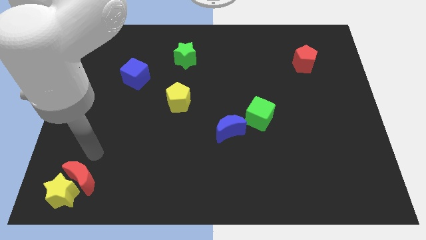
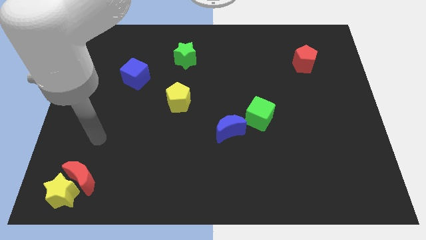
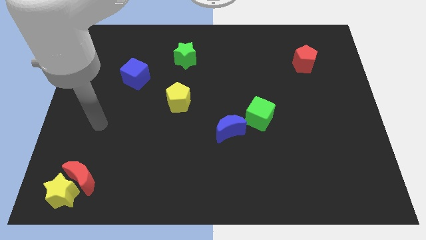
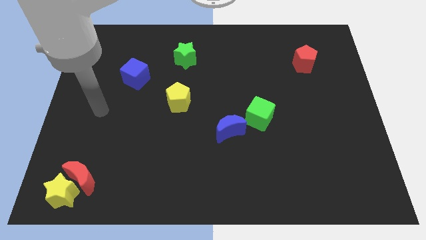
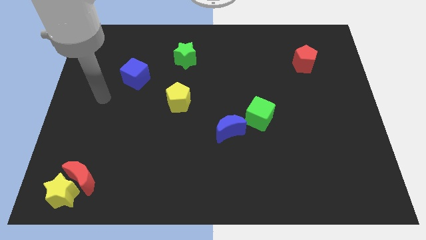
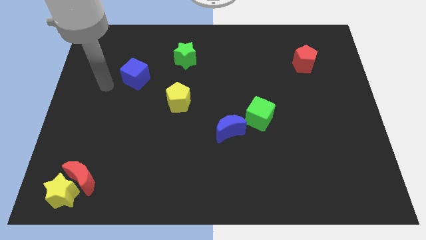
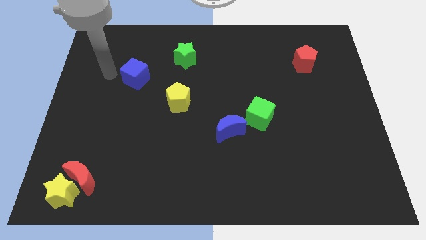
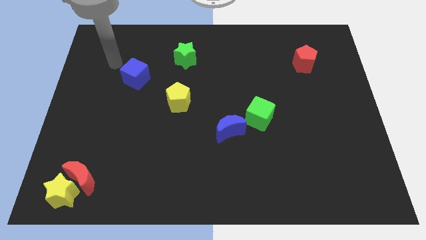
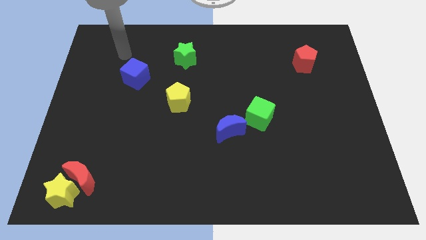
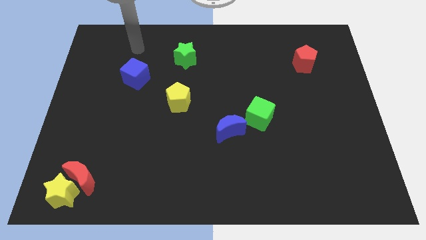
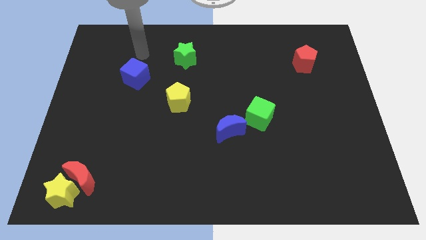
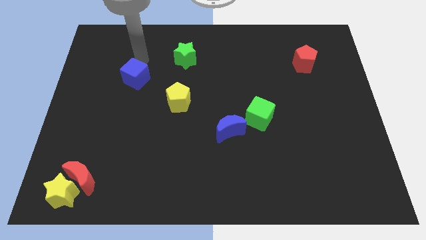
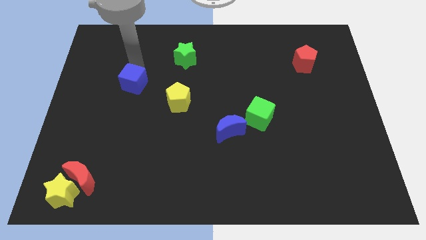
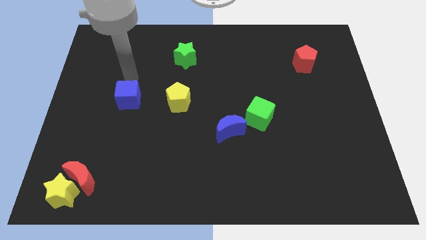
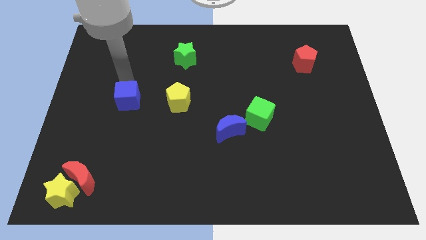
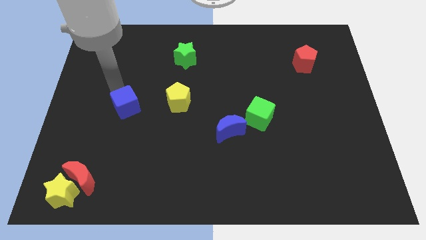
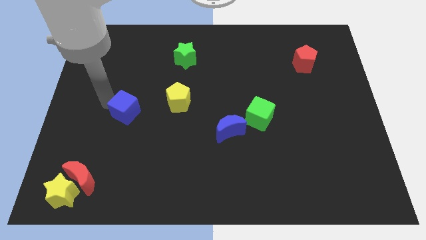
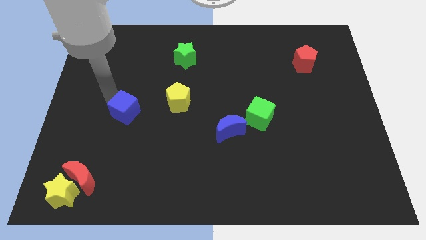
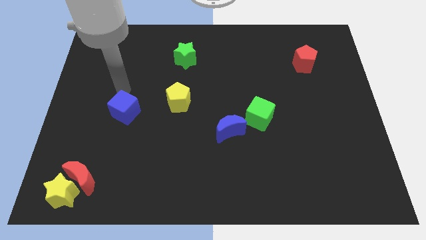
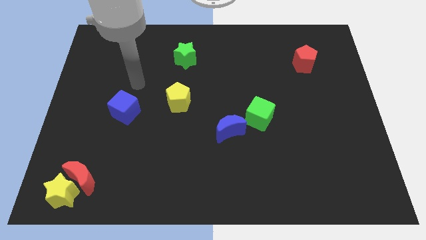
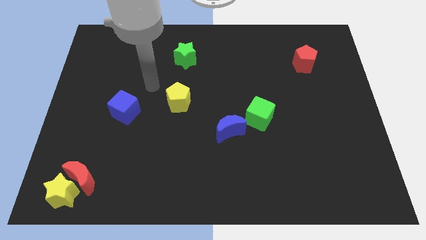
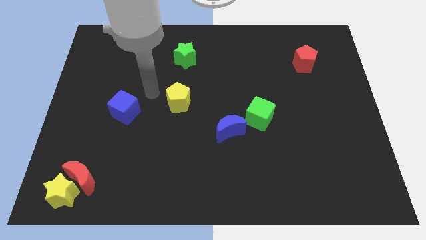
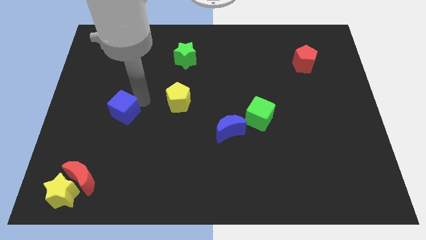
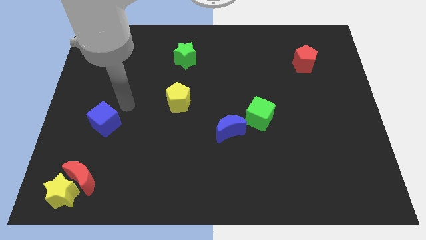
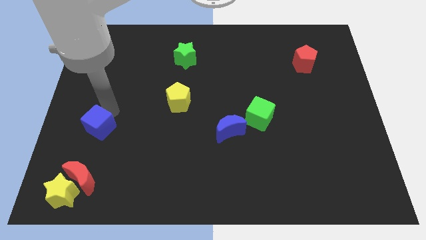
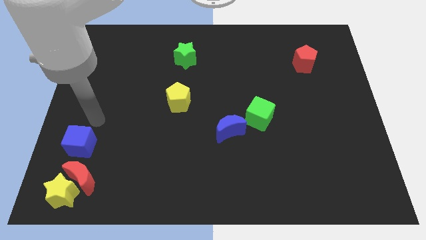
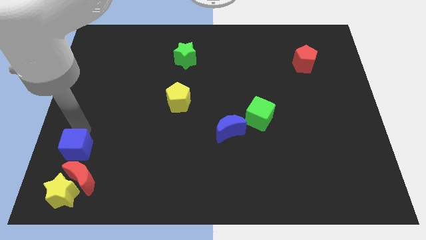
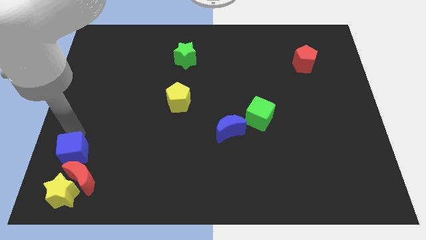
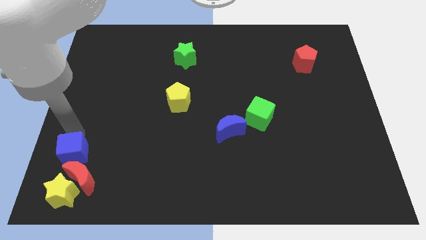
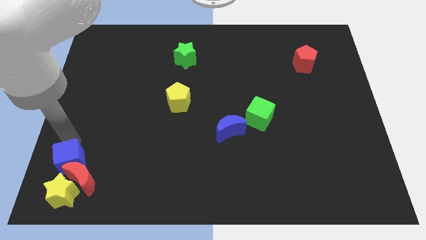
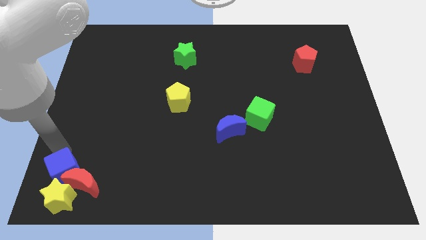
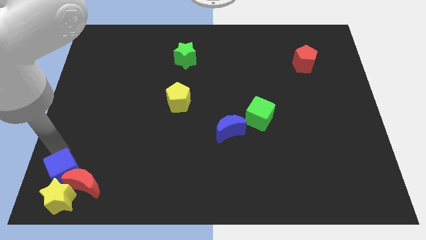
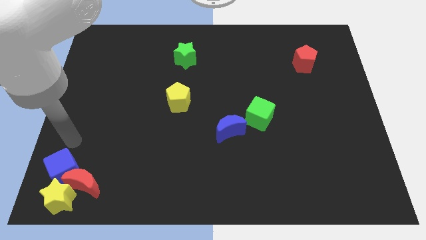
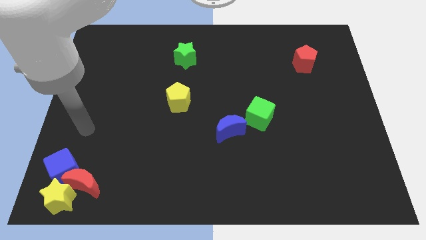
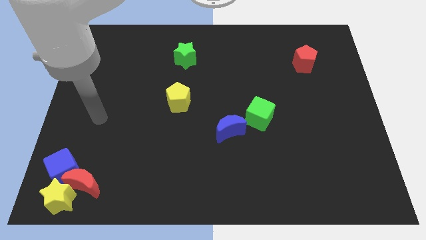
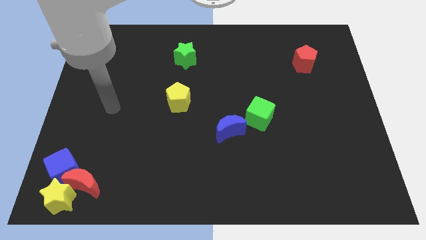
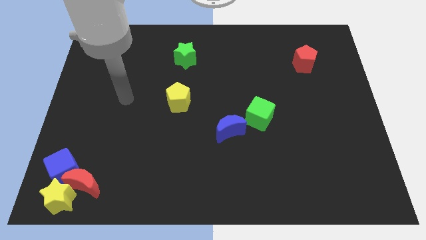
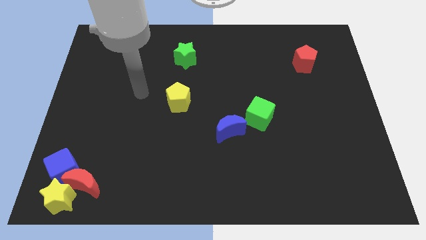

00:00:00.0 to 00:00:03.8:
push the blue cube into the red crescent and yellow star

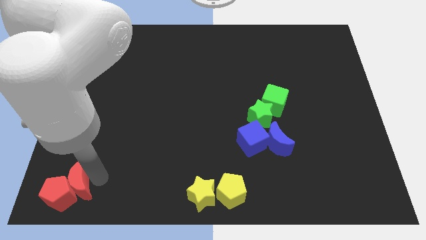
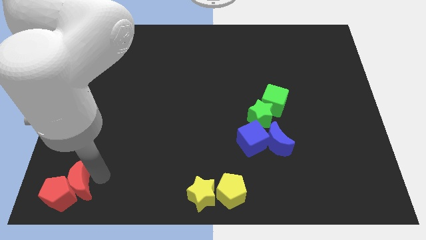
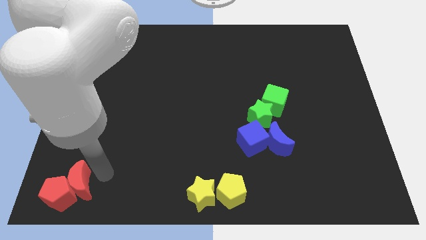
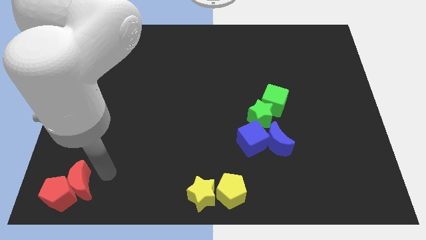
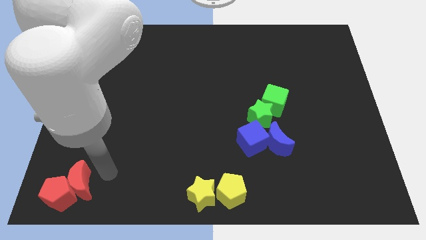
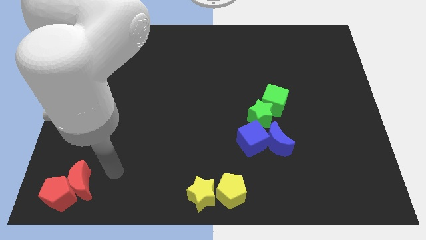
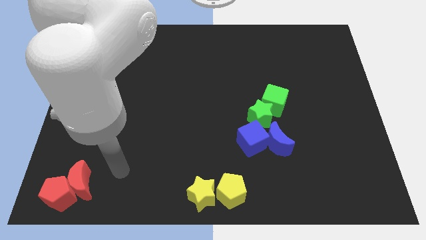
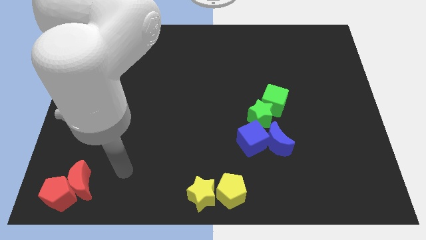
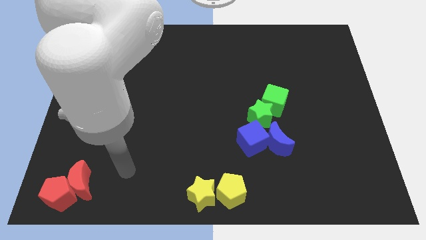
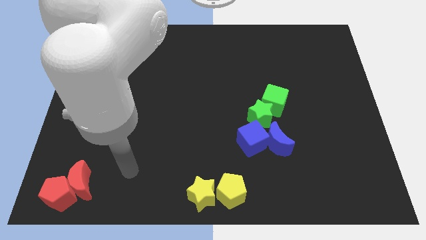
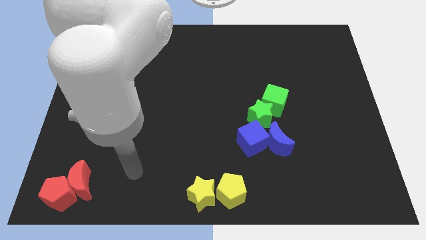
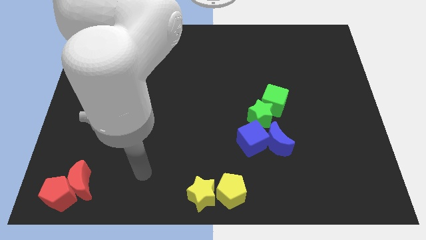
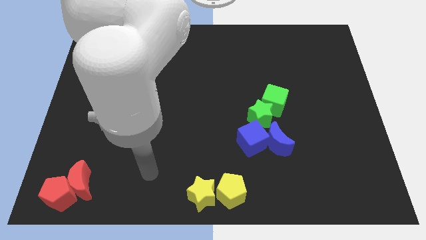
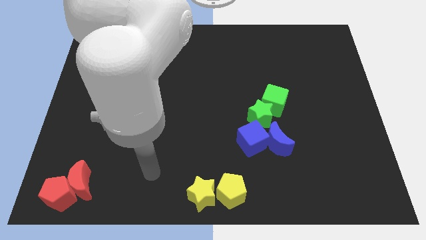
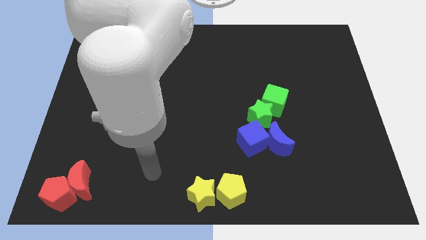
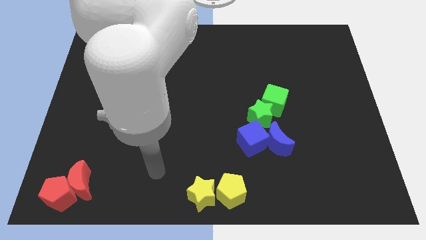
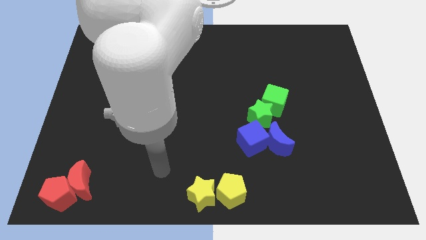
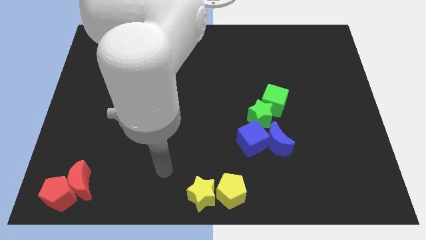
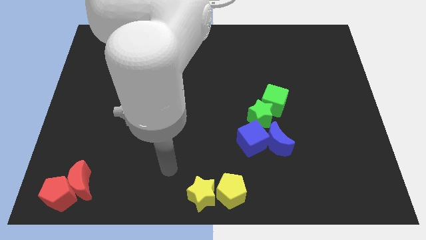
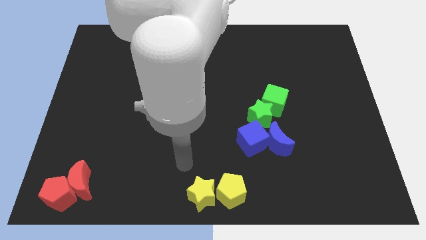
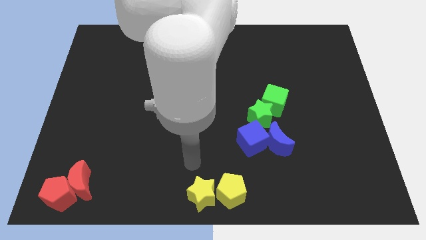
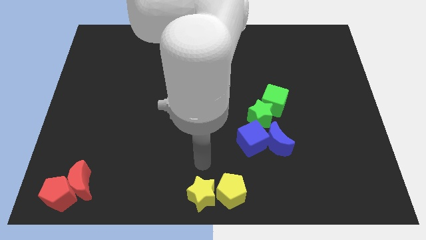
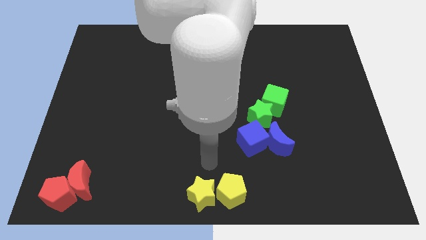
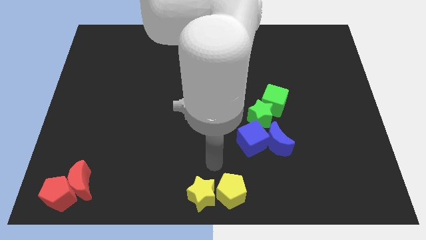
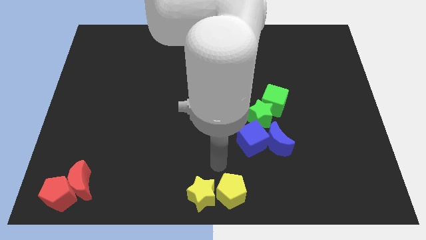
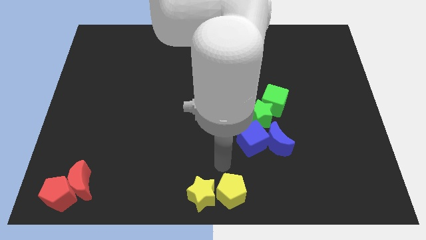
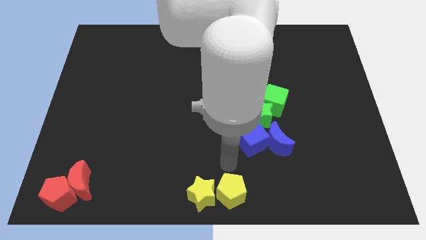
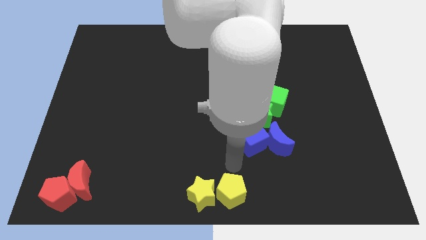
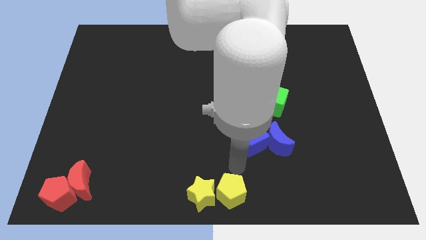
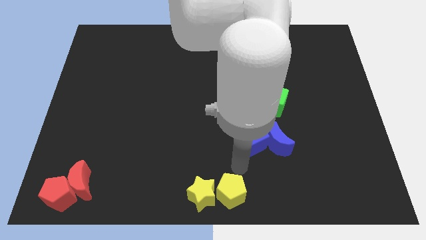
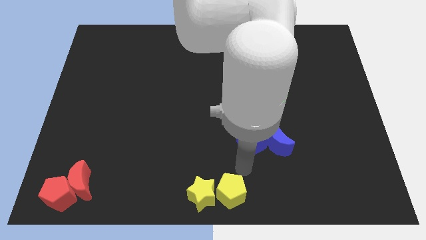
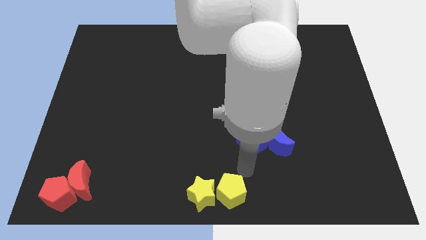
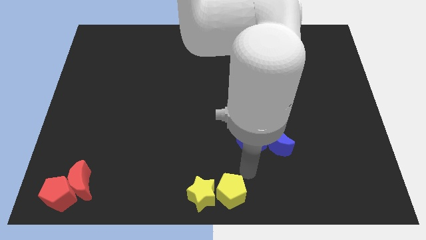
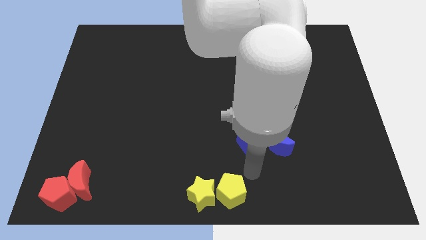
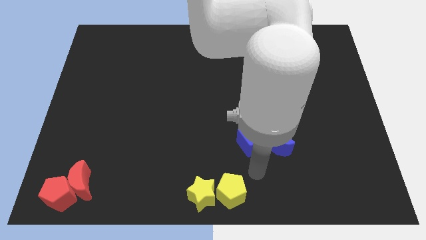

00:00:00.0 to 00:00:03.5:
move the arm away from the red moon

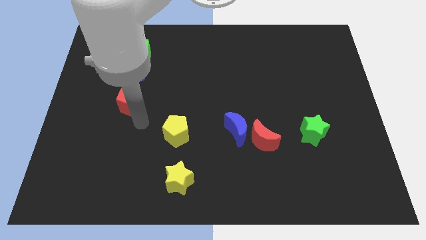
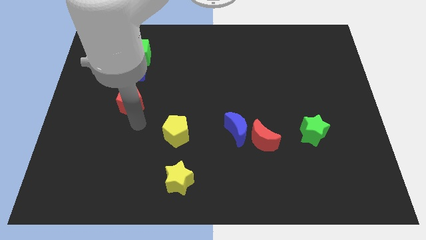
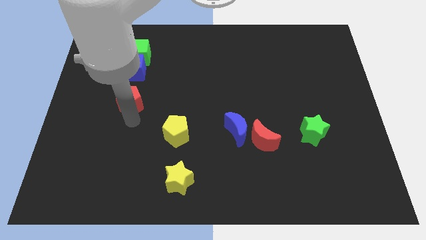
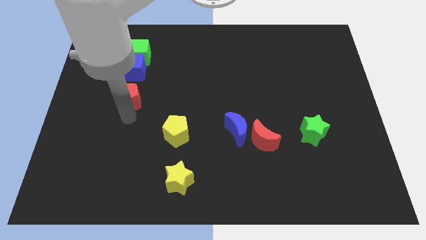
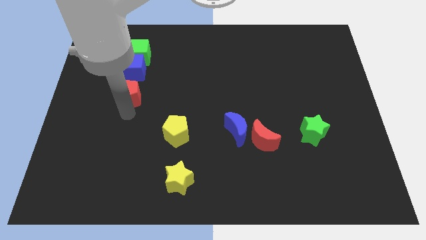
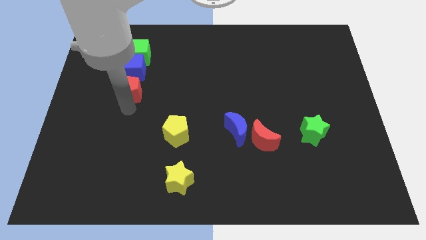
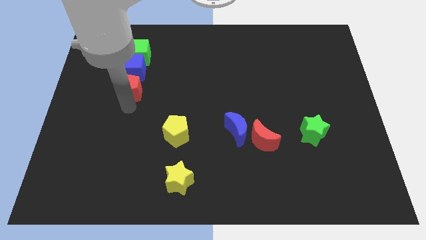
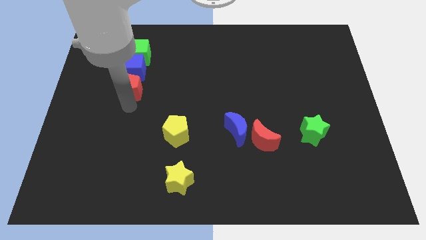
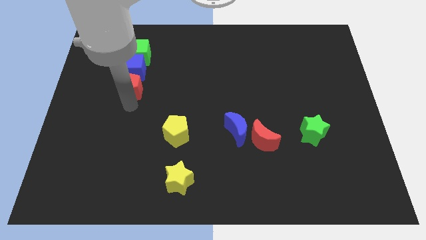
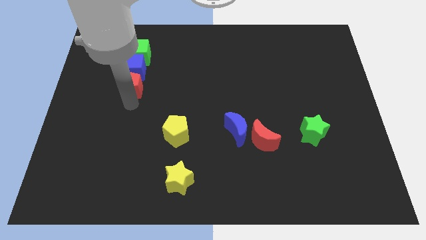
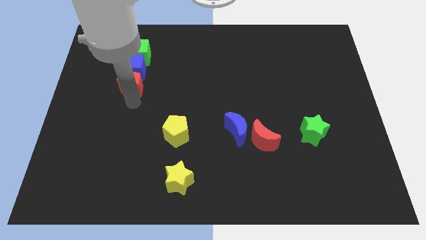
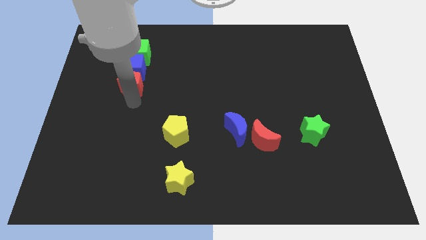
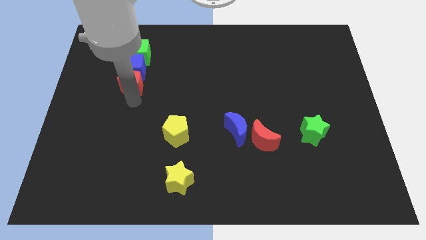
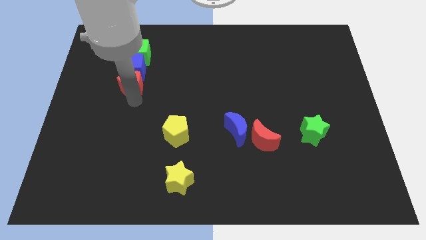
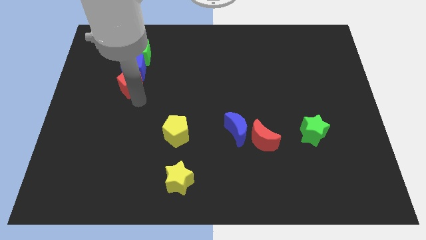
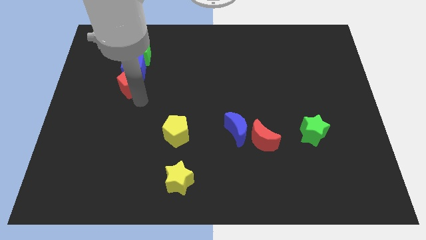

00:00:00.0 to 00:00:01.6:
place the red pentagon below the blue cube
